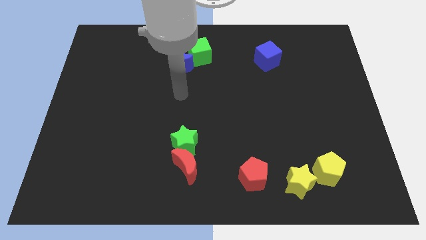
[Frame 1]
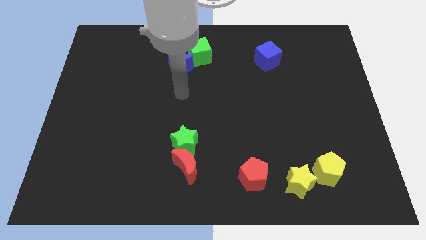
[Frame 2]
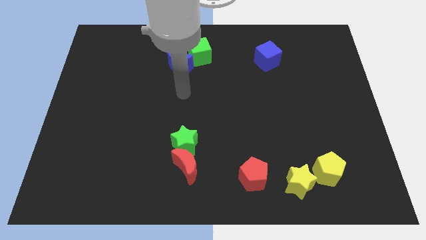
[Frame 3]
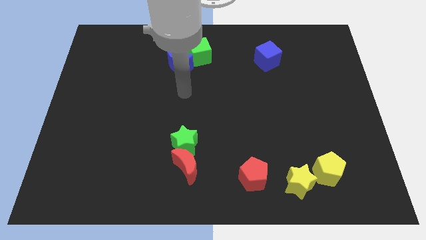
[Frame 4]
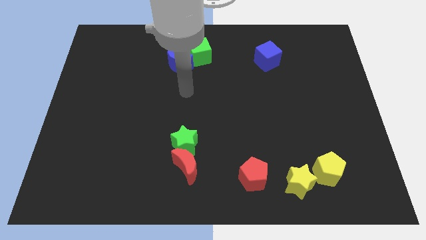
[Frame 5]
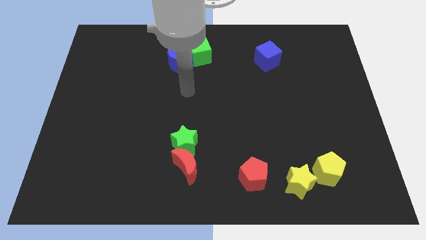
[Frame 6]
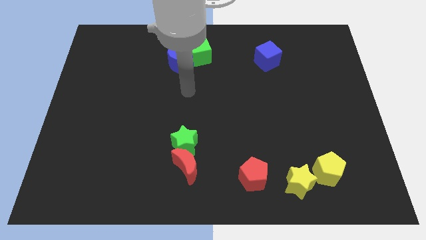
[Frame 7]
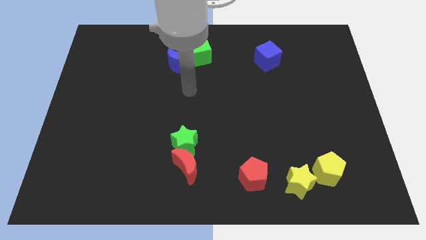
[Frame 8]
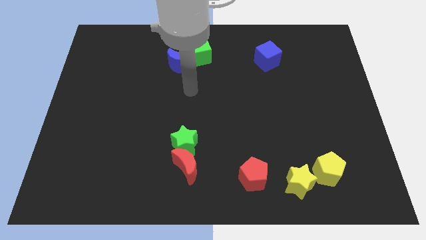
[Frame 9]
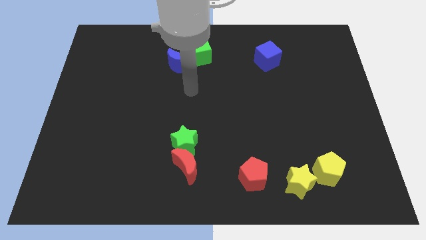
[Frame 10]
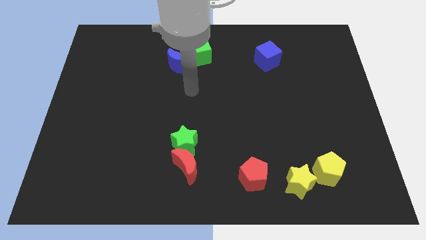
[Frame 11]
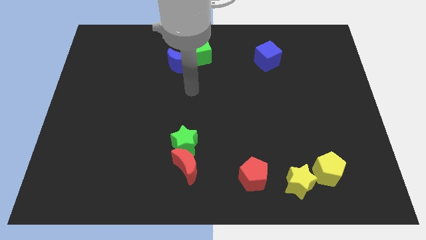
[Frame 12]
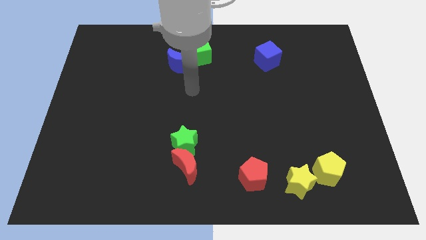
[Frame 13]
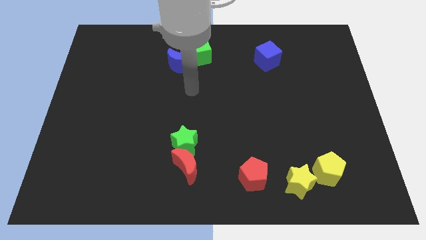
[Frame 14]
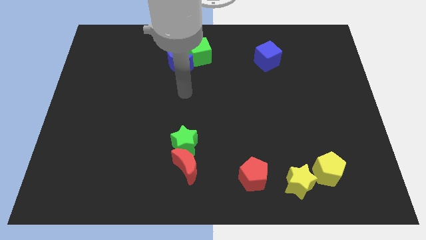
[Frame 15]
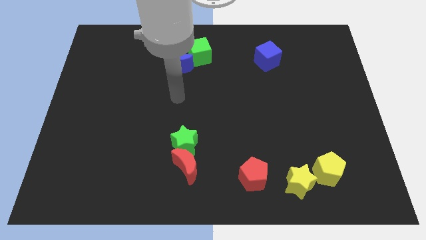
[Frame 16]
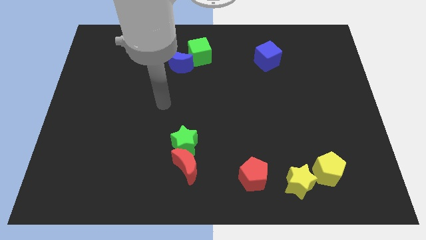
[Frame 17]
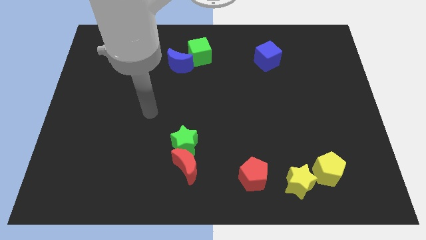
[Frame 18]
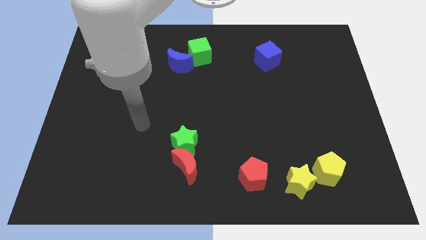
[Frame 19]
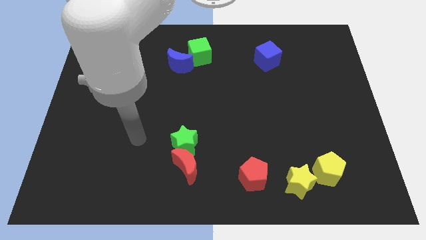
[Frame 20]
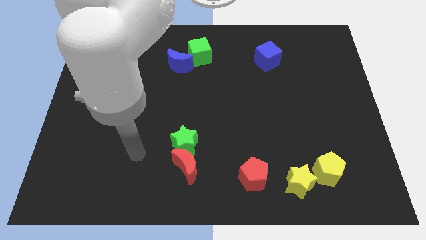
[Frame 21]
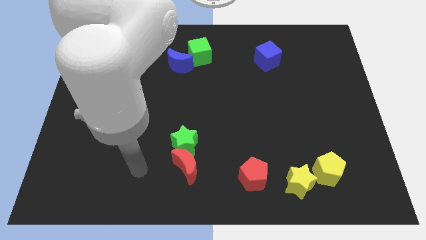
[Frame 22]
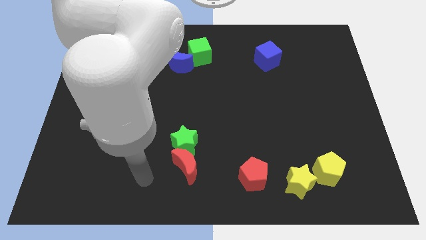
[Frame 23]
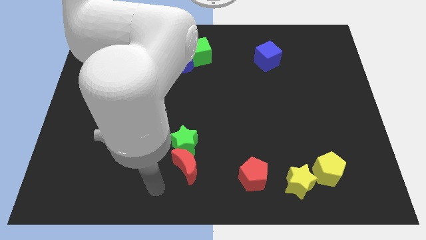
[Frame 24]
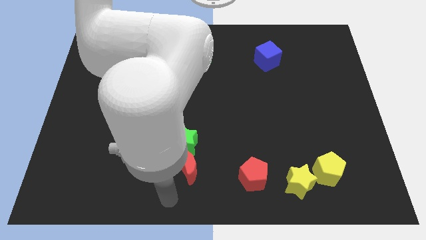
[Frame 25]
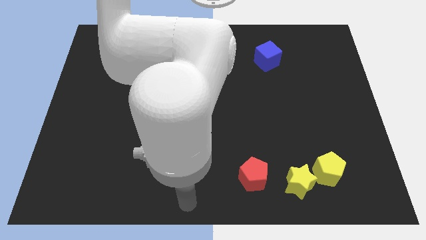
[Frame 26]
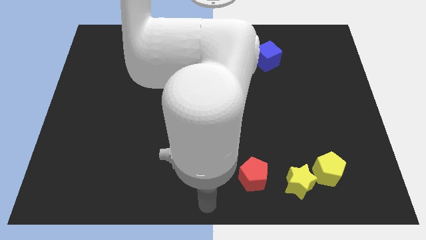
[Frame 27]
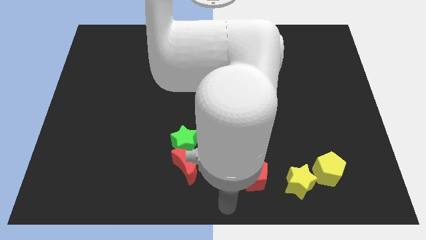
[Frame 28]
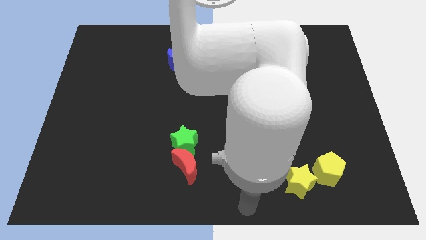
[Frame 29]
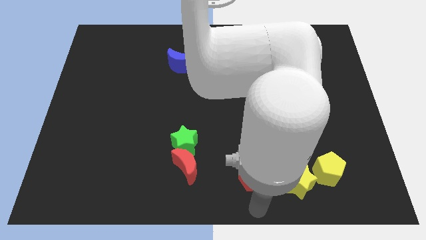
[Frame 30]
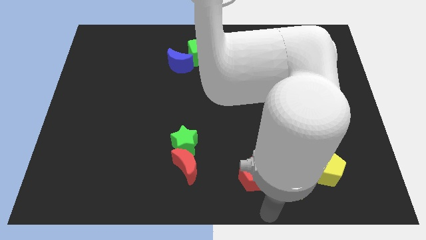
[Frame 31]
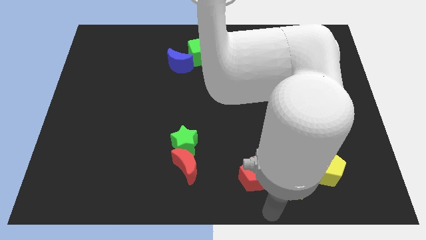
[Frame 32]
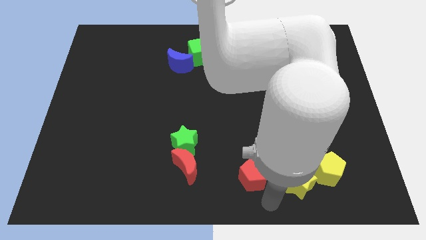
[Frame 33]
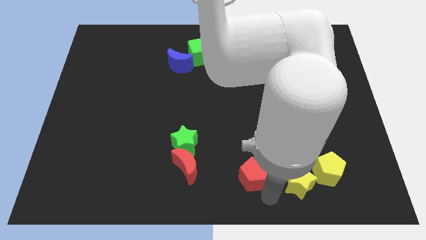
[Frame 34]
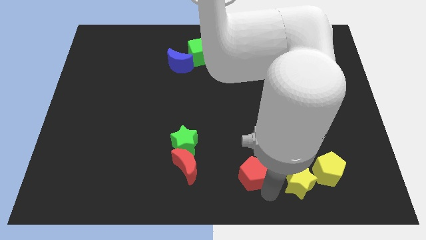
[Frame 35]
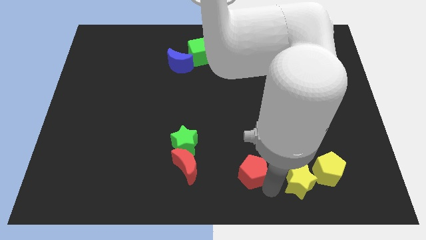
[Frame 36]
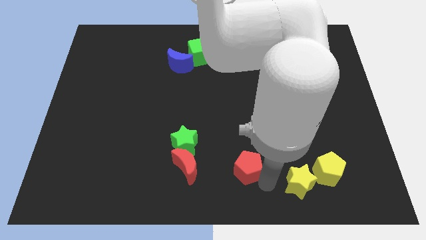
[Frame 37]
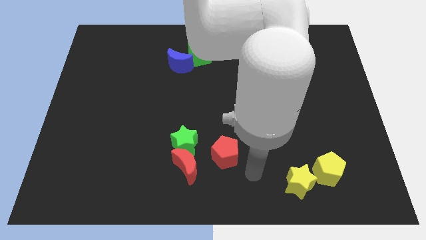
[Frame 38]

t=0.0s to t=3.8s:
move the red pentagon diagonal top right to red moon

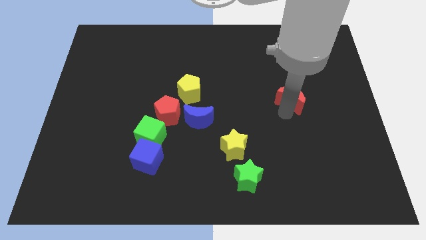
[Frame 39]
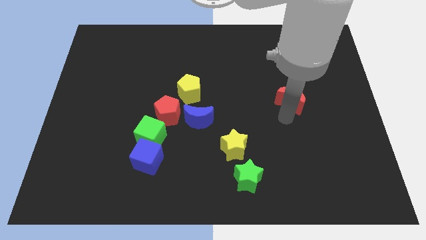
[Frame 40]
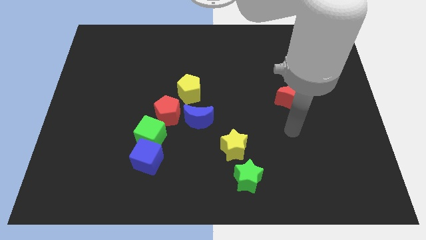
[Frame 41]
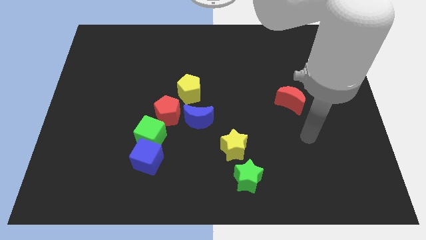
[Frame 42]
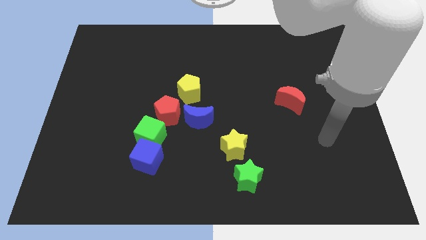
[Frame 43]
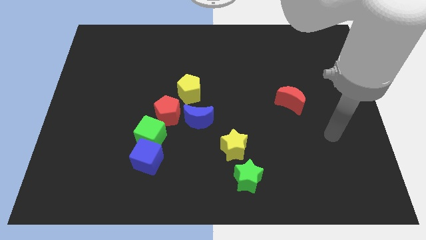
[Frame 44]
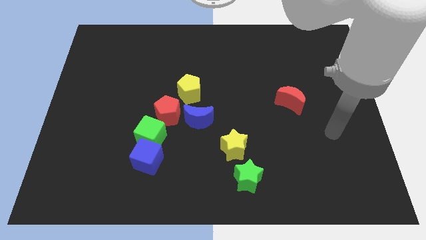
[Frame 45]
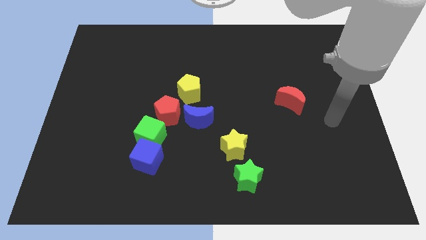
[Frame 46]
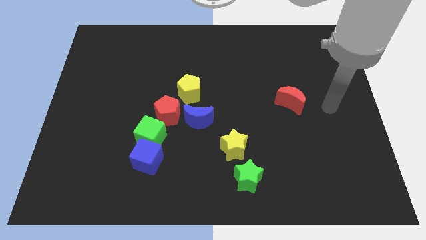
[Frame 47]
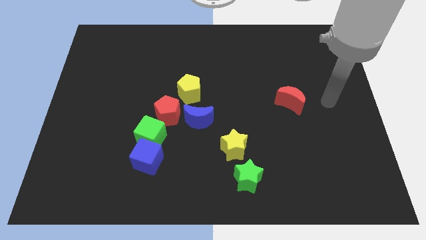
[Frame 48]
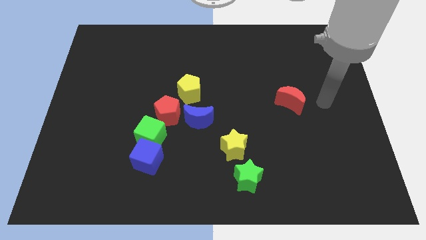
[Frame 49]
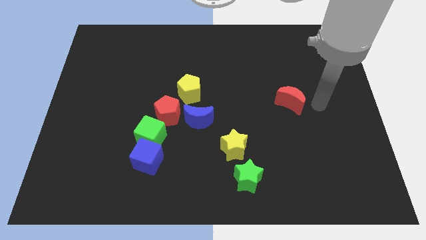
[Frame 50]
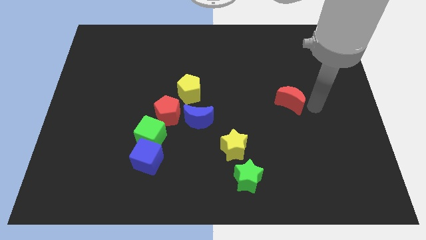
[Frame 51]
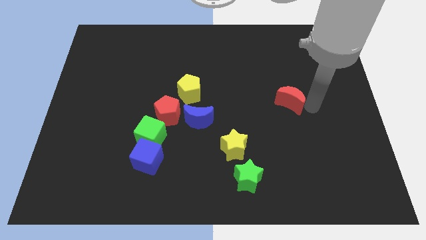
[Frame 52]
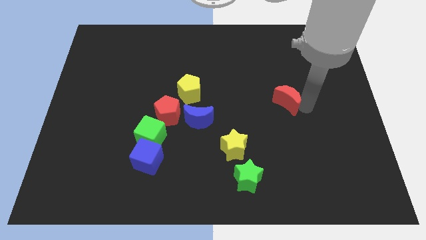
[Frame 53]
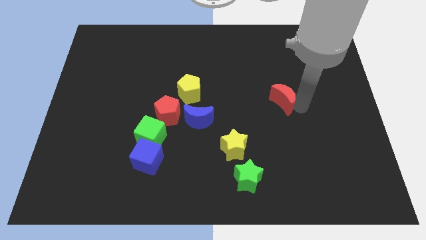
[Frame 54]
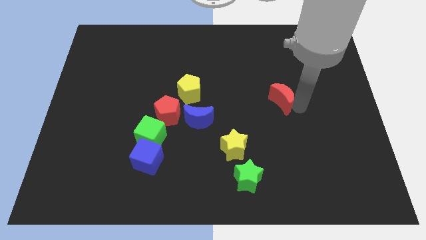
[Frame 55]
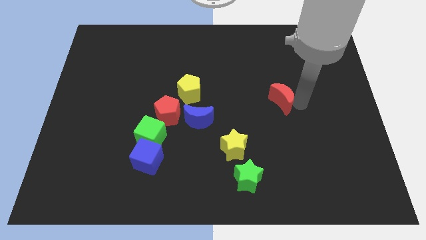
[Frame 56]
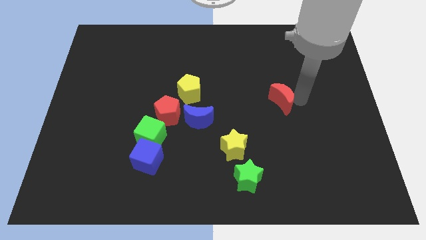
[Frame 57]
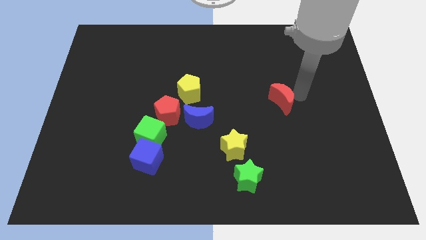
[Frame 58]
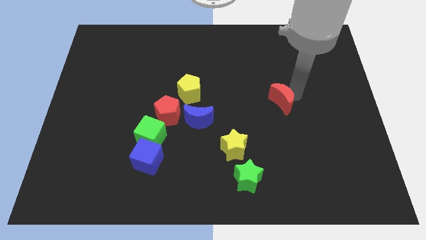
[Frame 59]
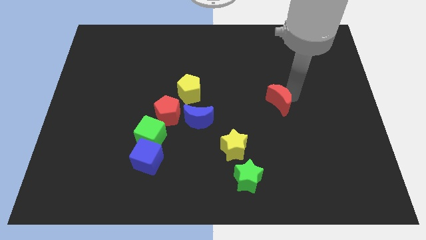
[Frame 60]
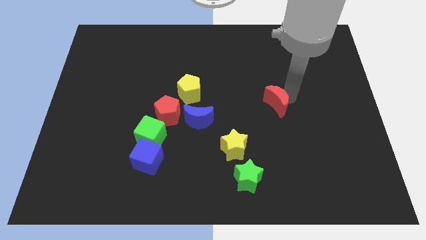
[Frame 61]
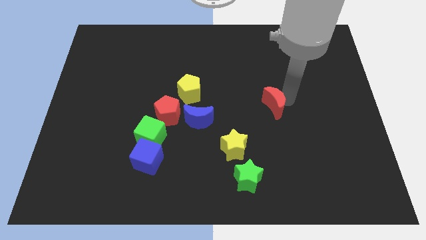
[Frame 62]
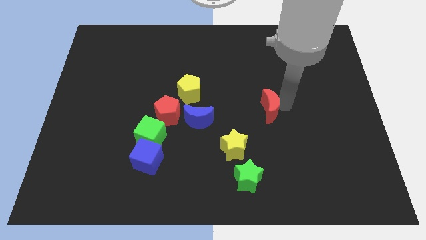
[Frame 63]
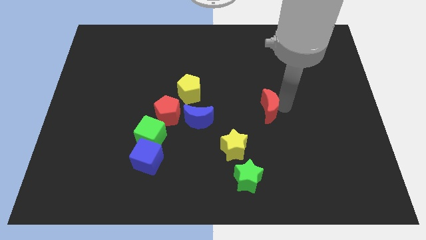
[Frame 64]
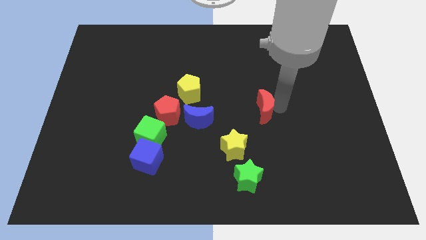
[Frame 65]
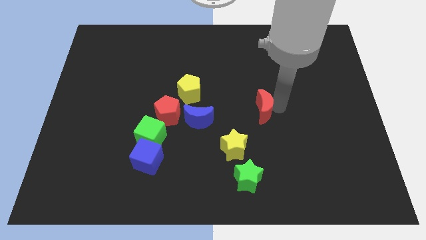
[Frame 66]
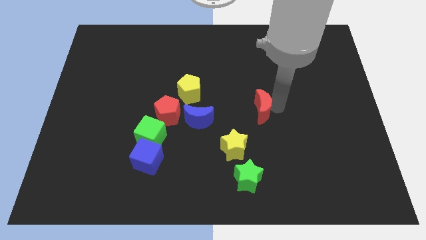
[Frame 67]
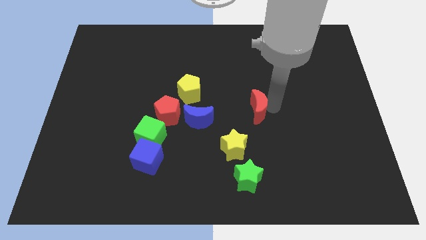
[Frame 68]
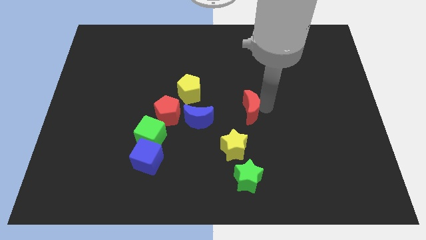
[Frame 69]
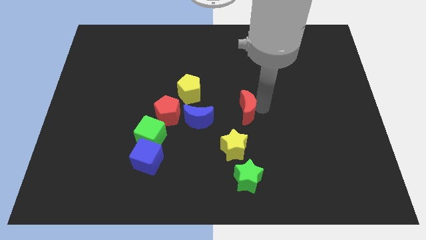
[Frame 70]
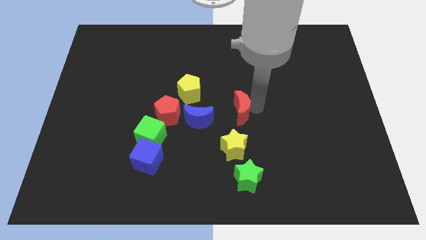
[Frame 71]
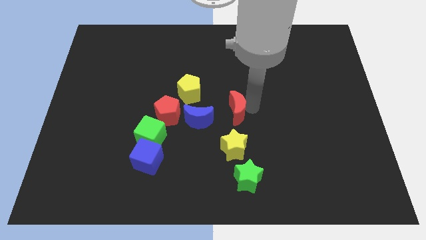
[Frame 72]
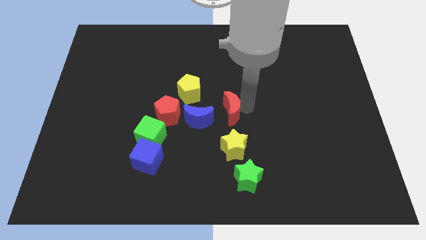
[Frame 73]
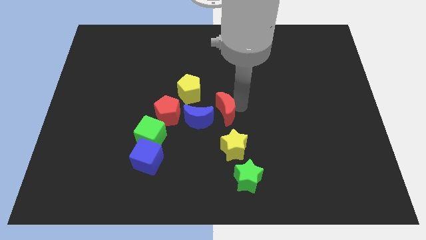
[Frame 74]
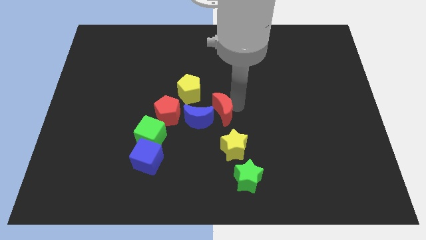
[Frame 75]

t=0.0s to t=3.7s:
place the red crescent to the right side of blue crescent

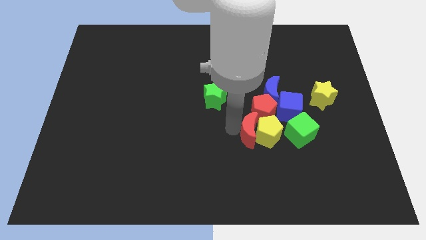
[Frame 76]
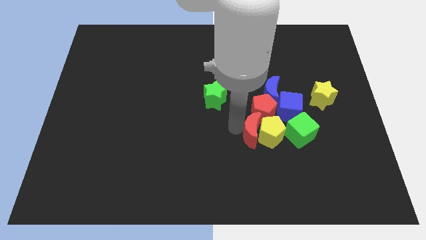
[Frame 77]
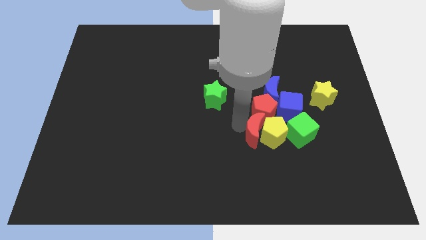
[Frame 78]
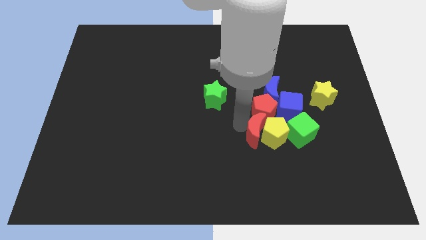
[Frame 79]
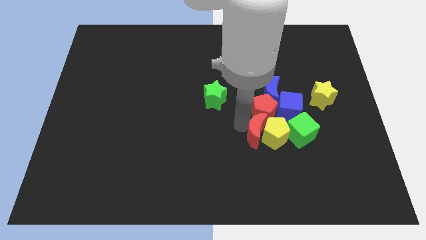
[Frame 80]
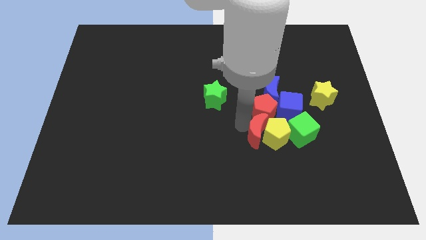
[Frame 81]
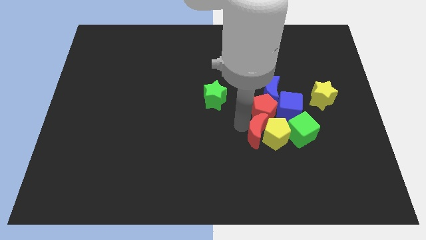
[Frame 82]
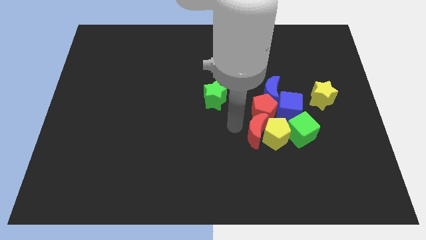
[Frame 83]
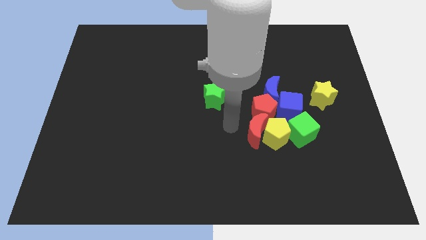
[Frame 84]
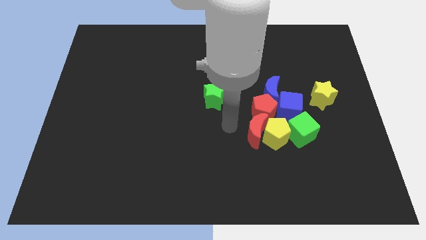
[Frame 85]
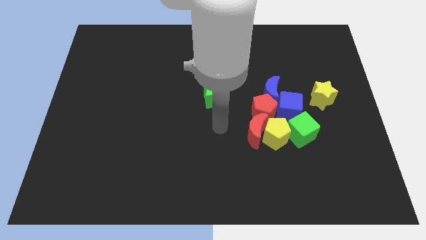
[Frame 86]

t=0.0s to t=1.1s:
slide your hand away from red moon

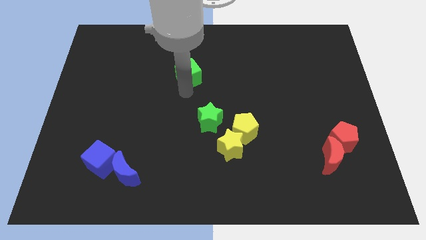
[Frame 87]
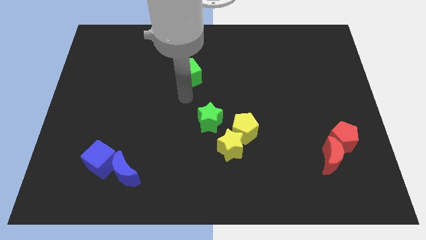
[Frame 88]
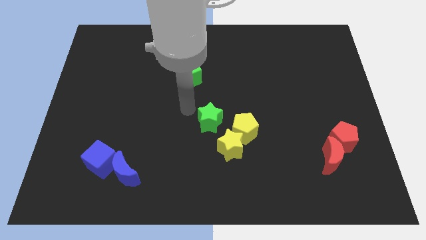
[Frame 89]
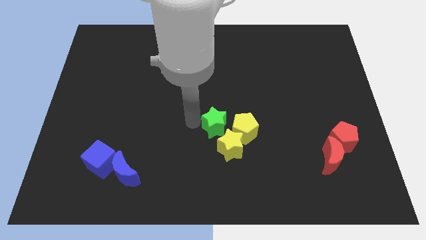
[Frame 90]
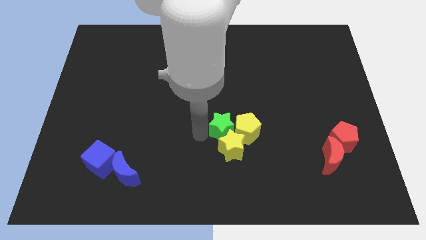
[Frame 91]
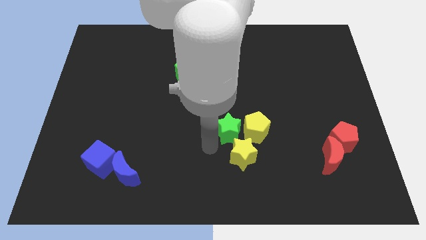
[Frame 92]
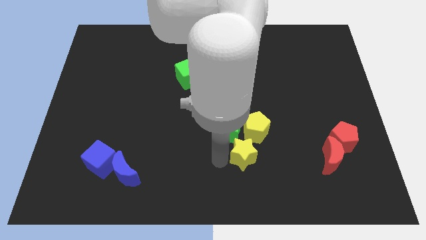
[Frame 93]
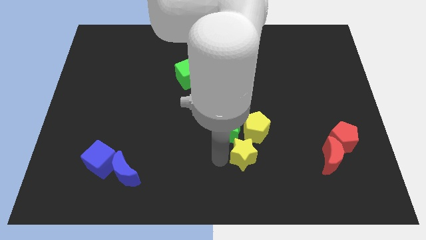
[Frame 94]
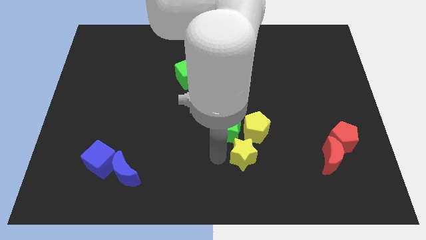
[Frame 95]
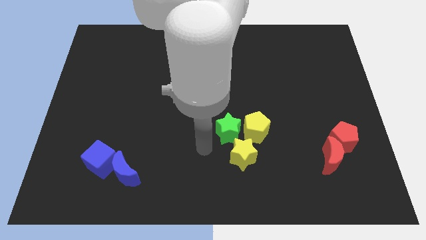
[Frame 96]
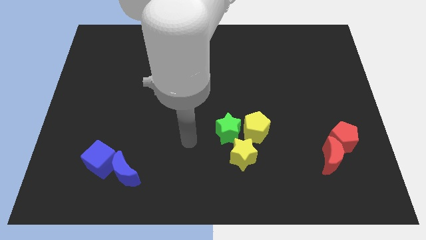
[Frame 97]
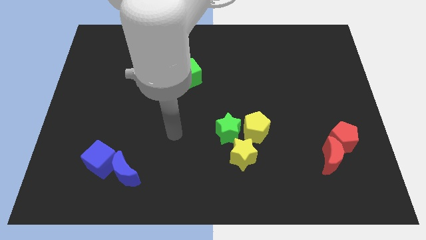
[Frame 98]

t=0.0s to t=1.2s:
place the green star left to the yellow pentagon
